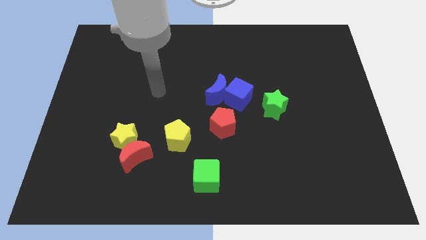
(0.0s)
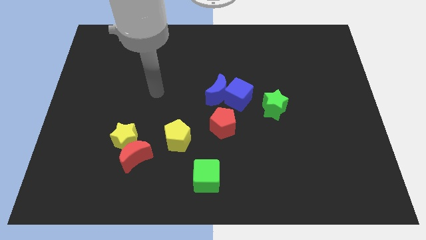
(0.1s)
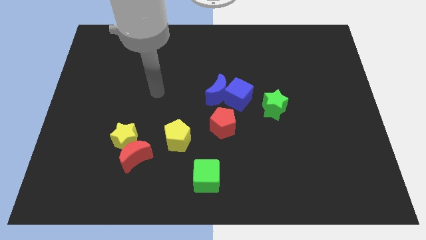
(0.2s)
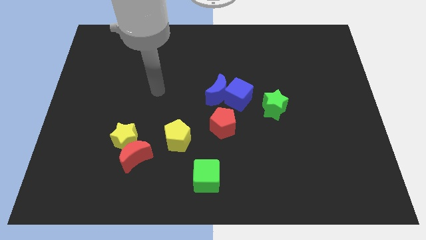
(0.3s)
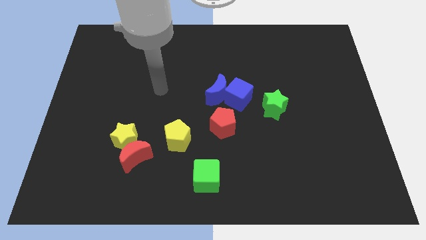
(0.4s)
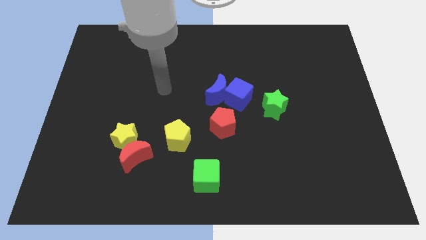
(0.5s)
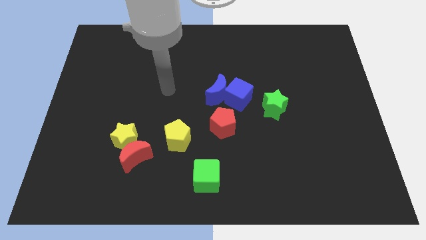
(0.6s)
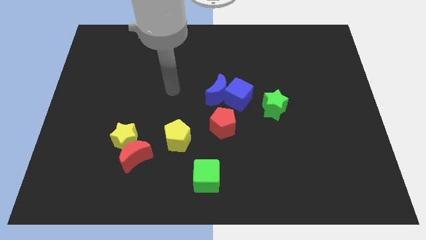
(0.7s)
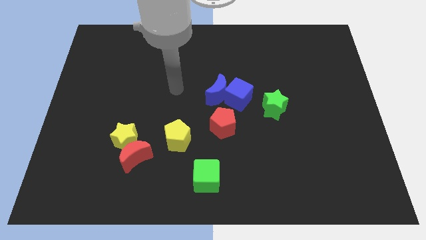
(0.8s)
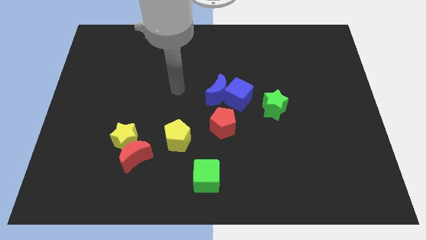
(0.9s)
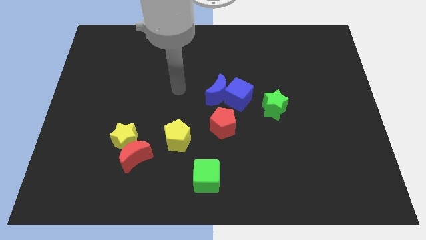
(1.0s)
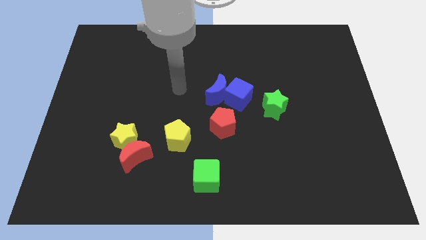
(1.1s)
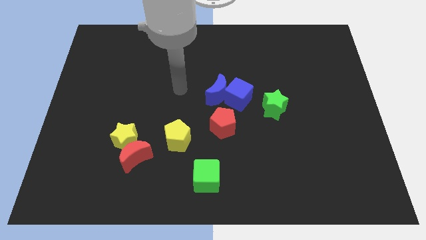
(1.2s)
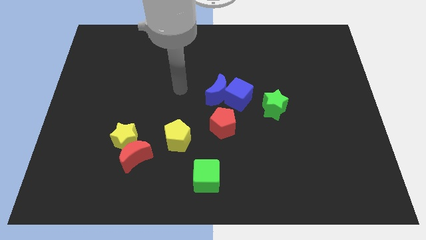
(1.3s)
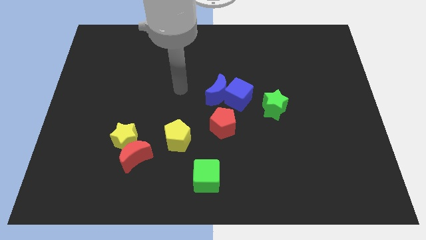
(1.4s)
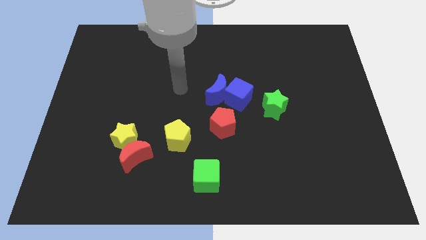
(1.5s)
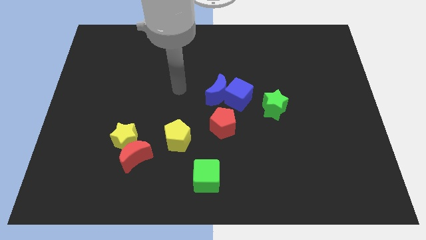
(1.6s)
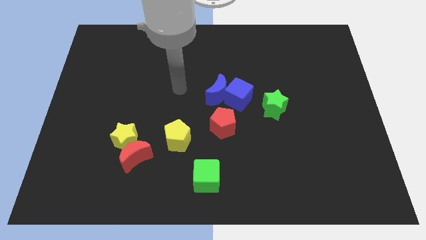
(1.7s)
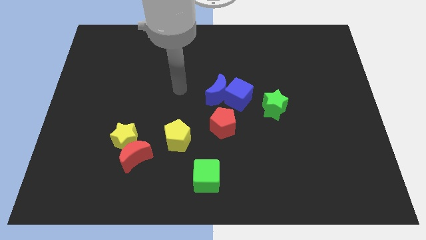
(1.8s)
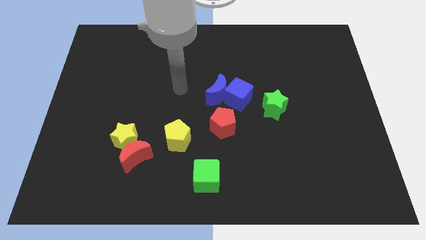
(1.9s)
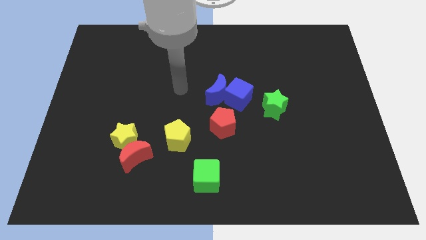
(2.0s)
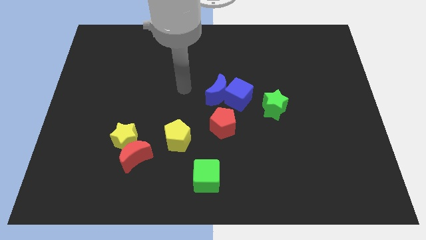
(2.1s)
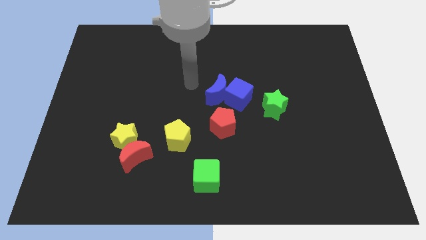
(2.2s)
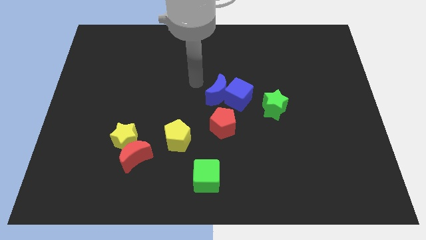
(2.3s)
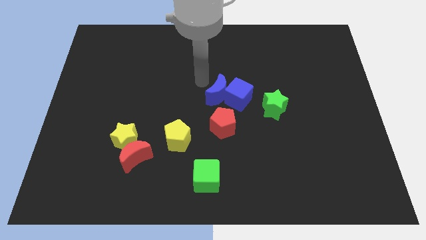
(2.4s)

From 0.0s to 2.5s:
move the arm close to the blue crescent

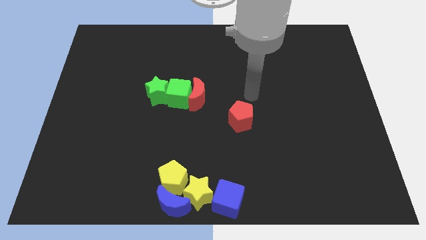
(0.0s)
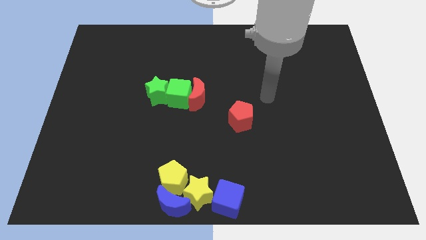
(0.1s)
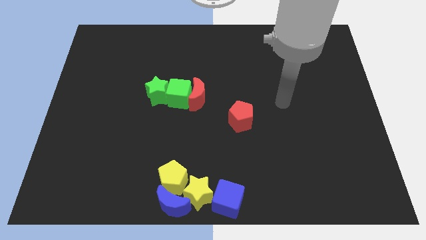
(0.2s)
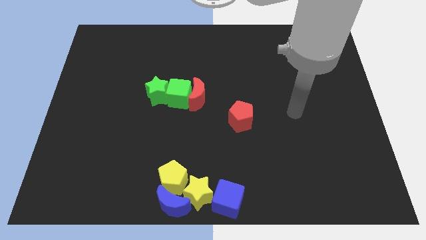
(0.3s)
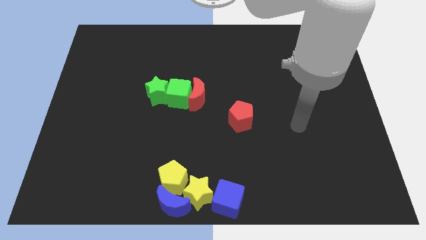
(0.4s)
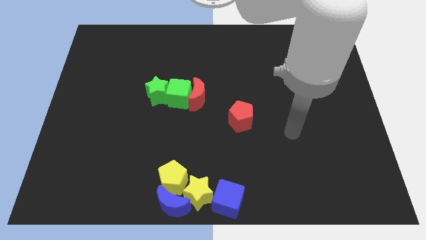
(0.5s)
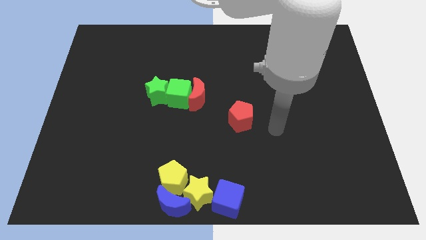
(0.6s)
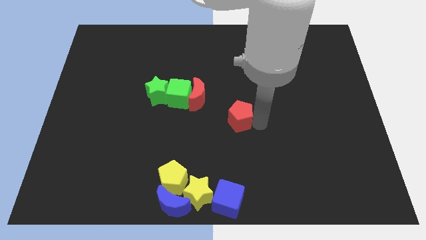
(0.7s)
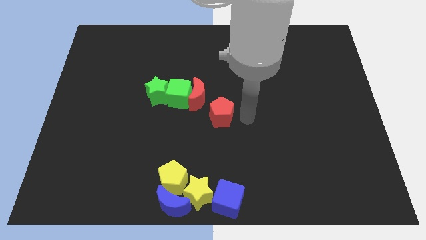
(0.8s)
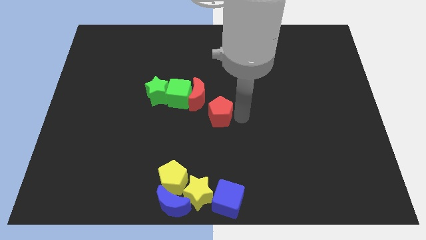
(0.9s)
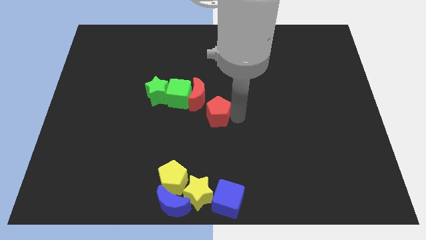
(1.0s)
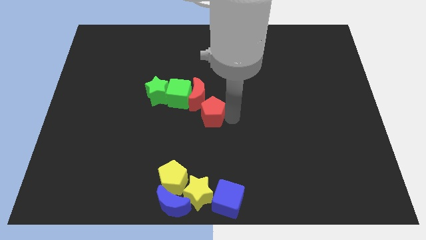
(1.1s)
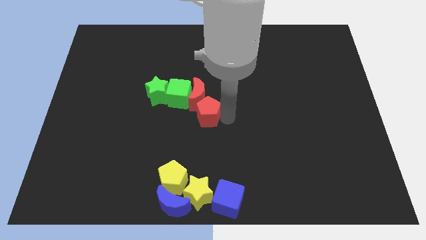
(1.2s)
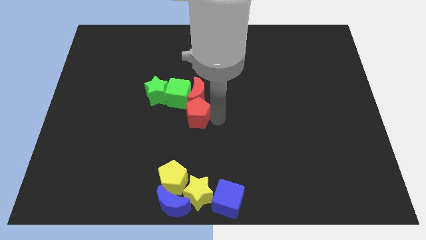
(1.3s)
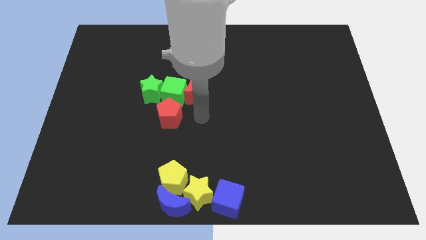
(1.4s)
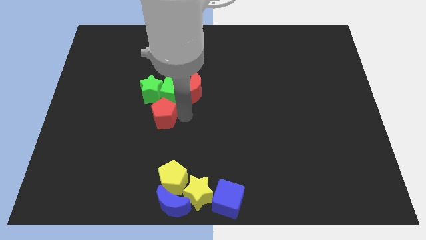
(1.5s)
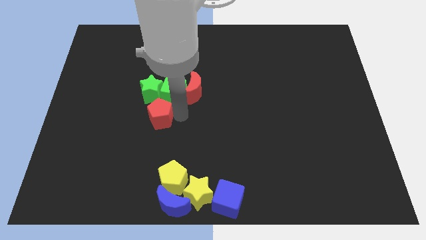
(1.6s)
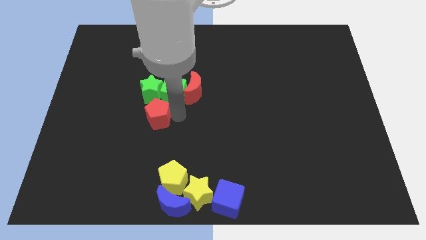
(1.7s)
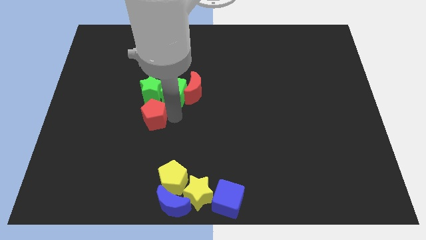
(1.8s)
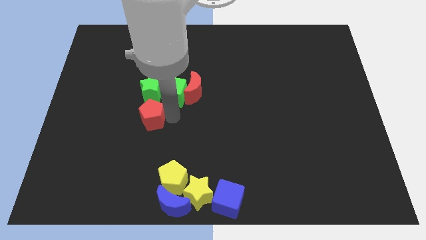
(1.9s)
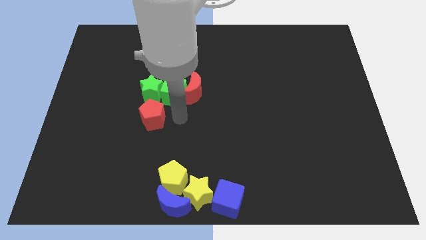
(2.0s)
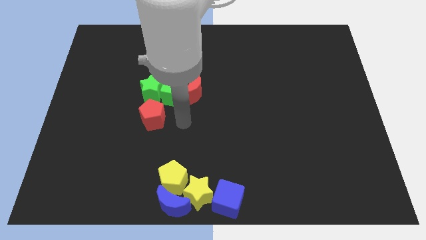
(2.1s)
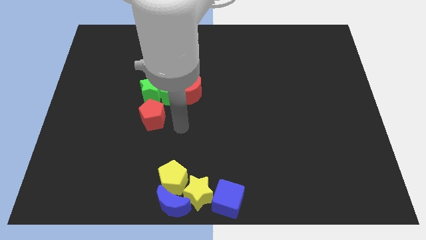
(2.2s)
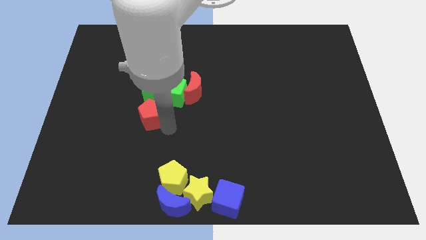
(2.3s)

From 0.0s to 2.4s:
push red pentagon to the bottom of the green star

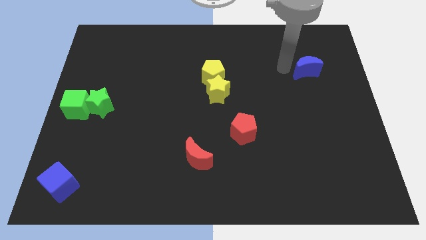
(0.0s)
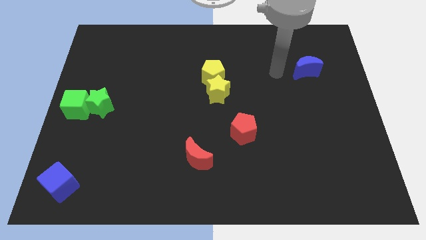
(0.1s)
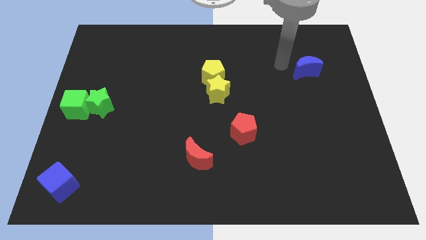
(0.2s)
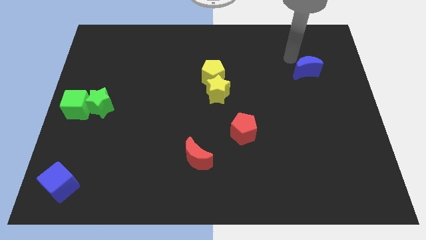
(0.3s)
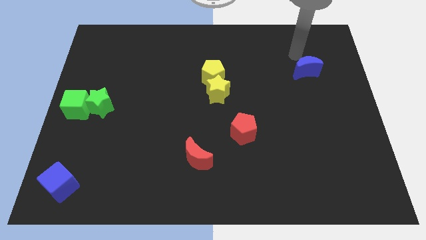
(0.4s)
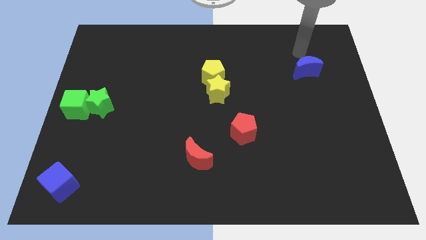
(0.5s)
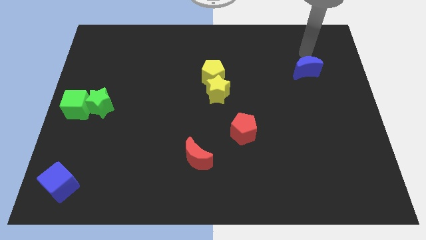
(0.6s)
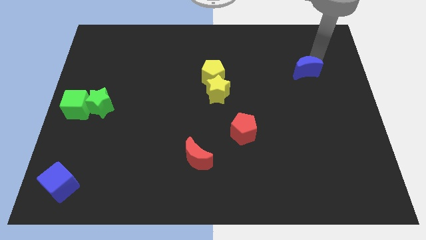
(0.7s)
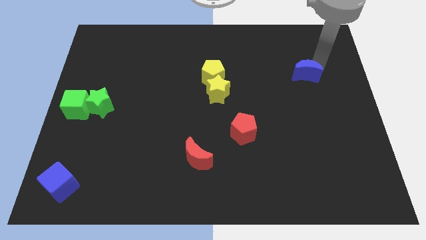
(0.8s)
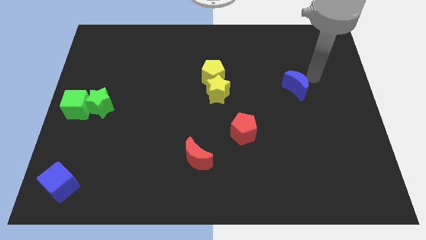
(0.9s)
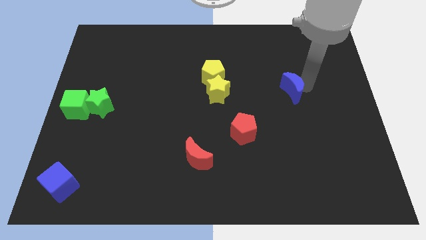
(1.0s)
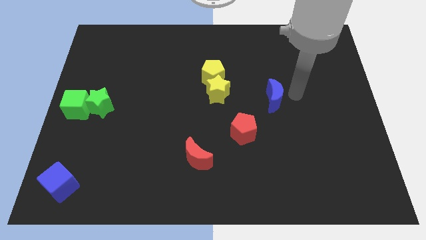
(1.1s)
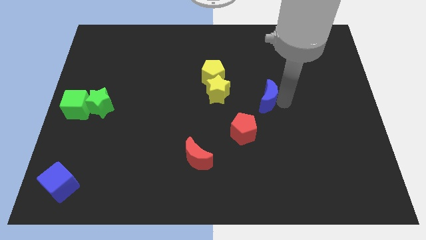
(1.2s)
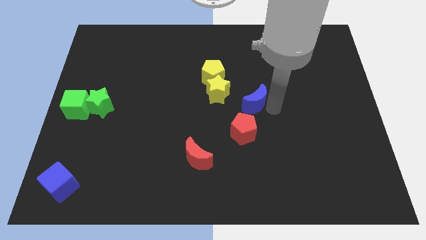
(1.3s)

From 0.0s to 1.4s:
push the blue crescent to the top right of the red pentagon

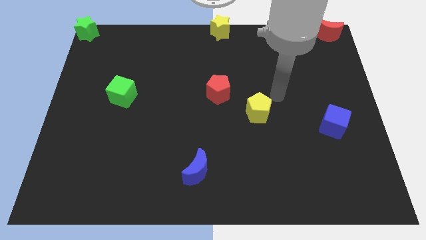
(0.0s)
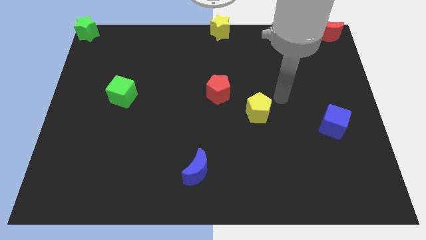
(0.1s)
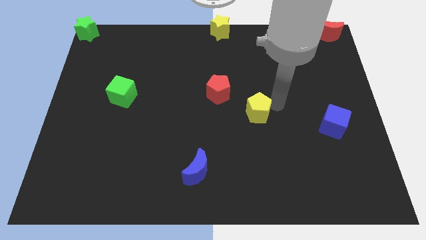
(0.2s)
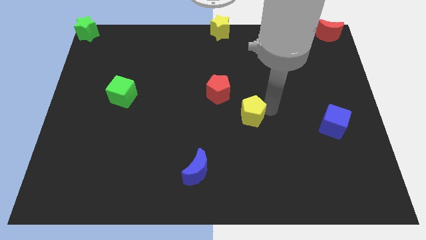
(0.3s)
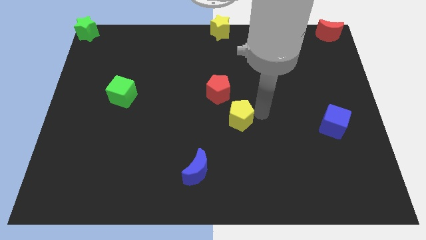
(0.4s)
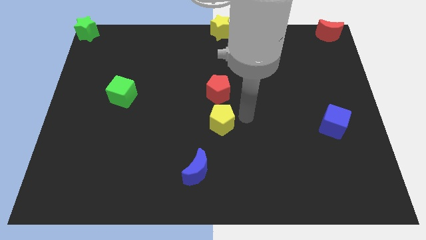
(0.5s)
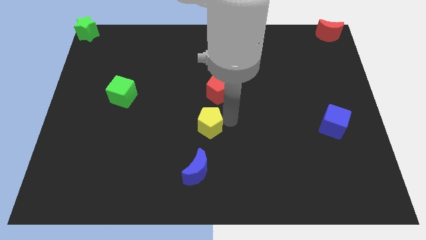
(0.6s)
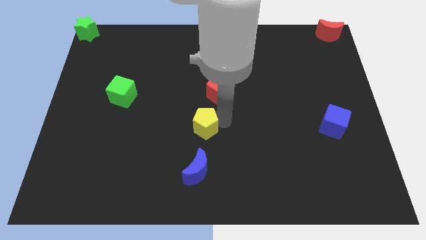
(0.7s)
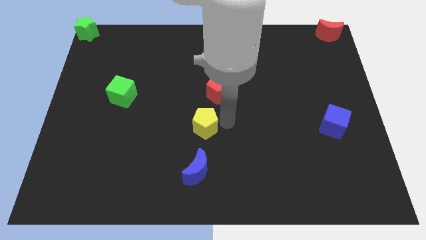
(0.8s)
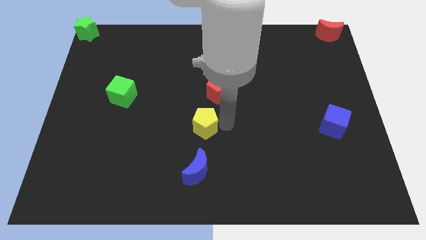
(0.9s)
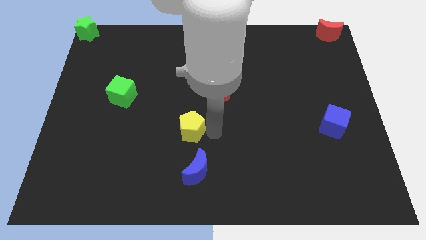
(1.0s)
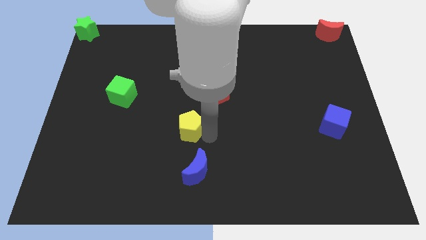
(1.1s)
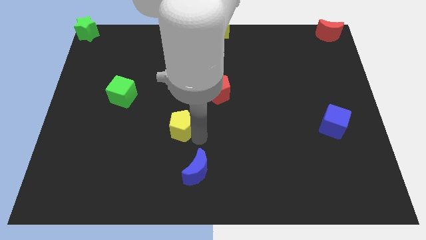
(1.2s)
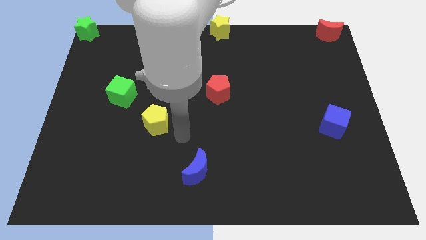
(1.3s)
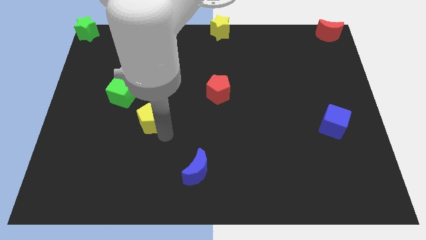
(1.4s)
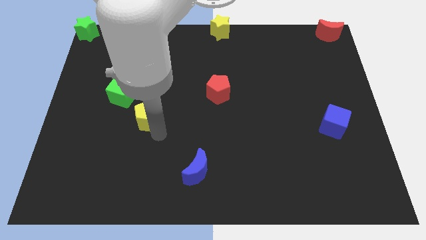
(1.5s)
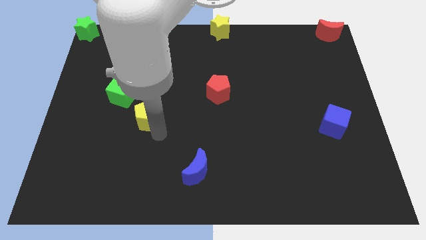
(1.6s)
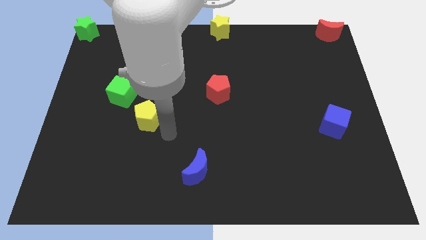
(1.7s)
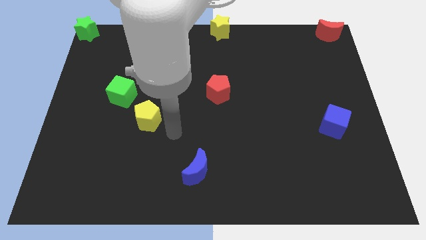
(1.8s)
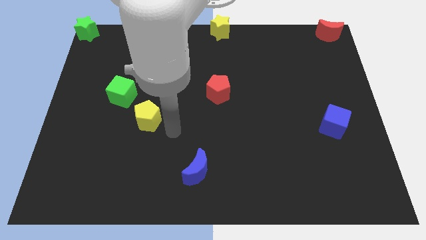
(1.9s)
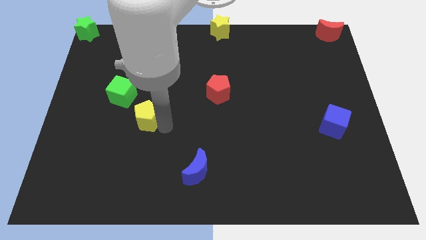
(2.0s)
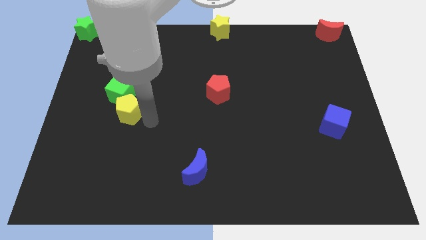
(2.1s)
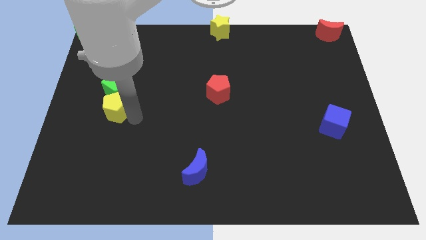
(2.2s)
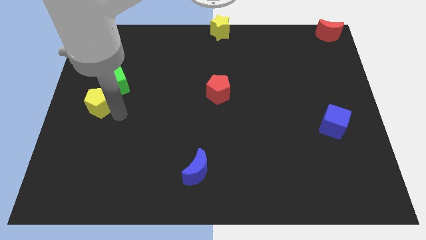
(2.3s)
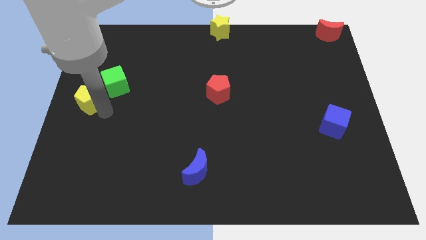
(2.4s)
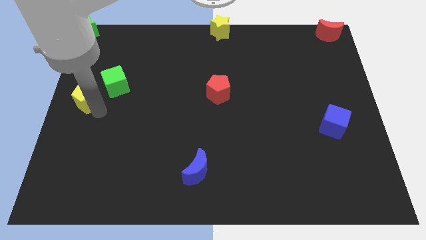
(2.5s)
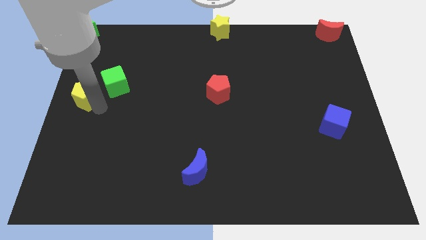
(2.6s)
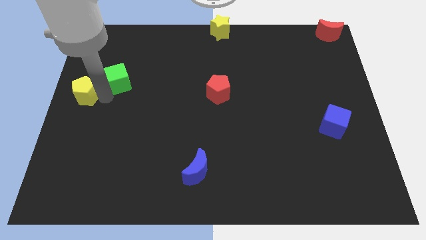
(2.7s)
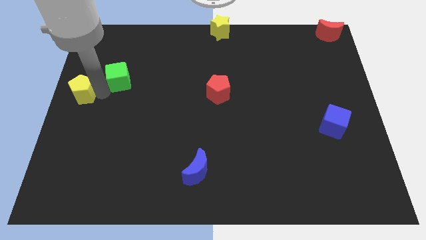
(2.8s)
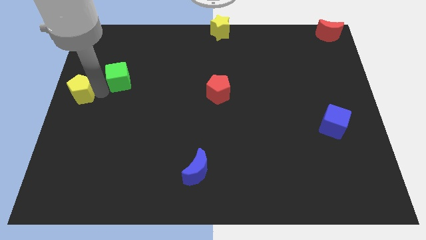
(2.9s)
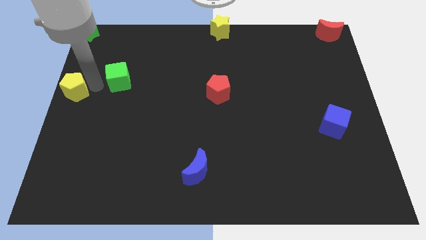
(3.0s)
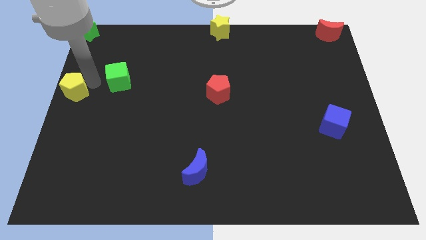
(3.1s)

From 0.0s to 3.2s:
move yellow pentagon to the left center of the board
